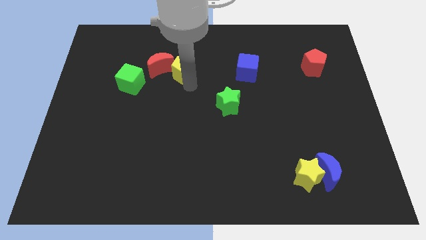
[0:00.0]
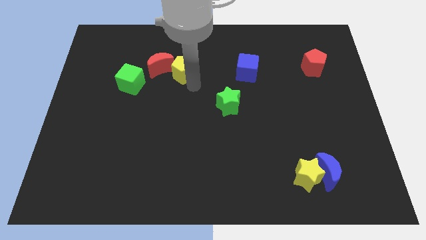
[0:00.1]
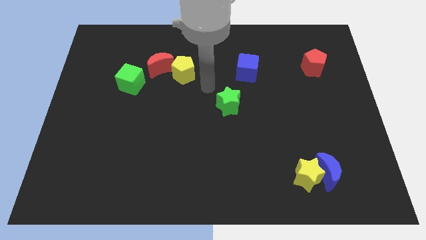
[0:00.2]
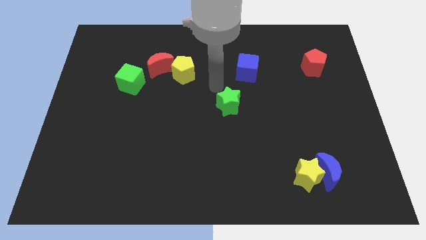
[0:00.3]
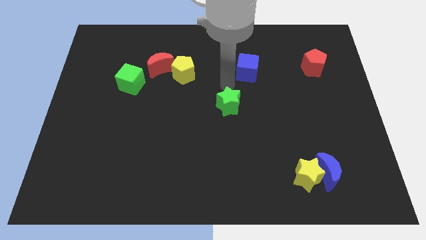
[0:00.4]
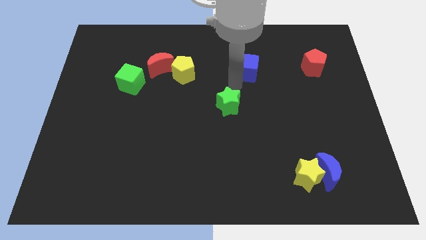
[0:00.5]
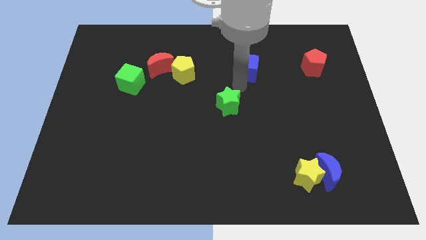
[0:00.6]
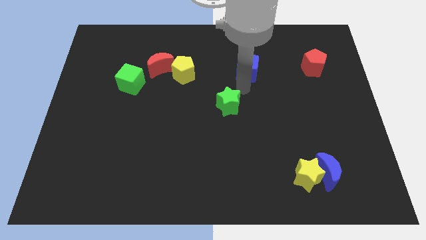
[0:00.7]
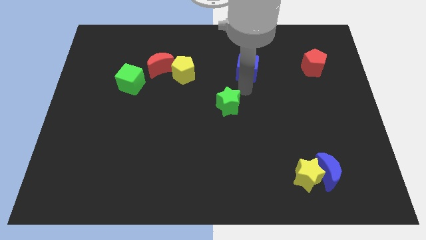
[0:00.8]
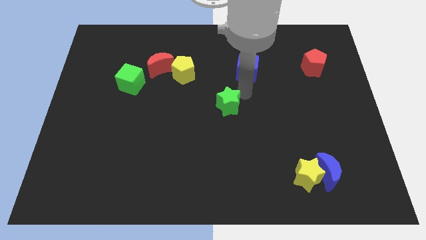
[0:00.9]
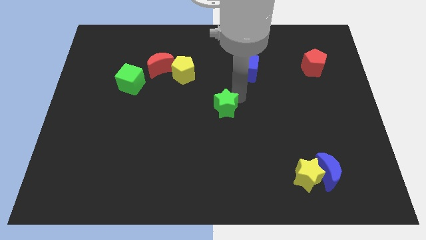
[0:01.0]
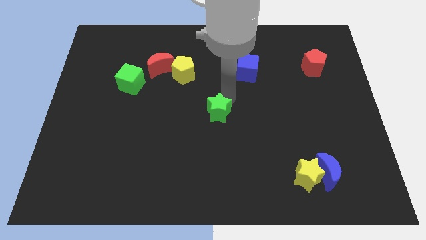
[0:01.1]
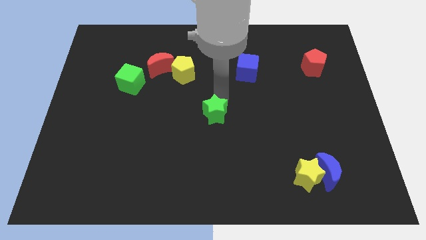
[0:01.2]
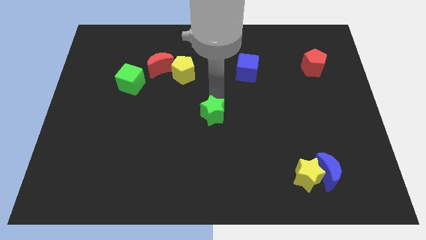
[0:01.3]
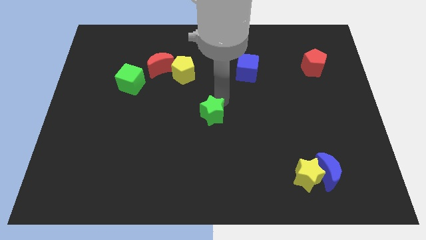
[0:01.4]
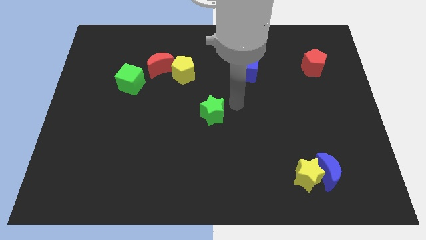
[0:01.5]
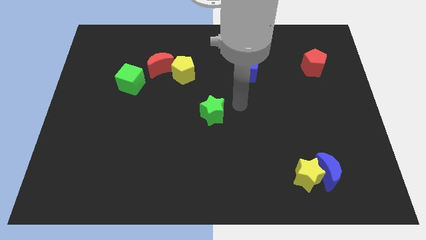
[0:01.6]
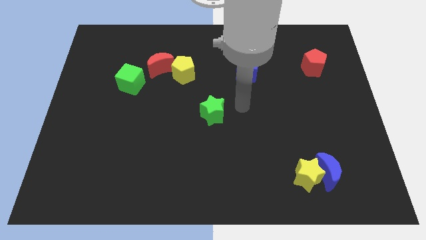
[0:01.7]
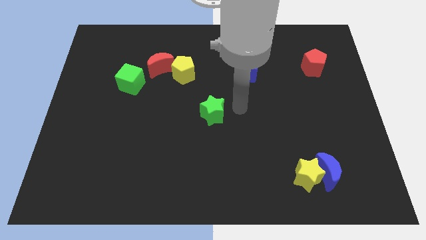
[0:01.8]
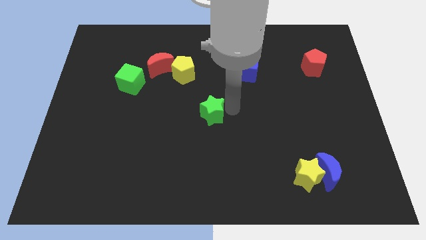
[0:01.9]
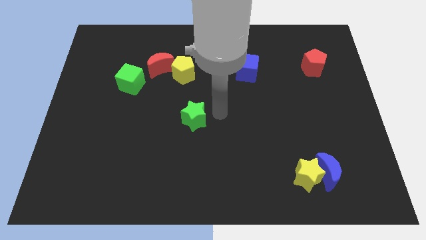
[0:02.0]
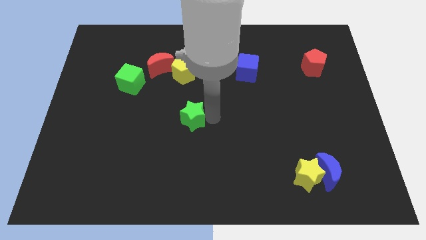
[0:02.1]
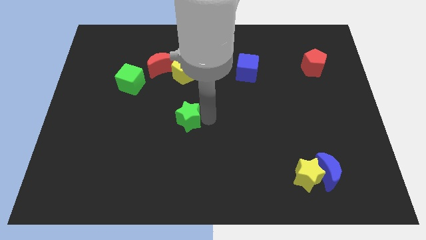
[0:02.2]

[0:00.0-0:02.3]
place the green star below the yellow pentagon

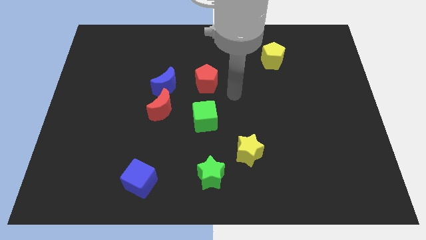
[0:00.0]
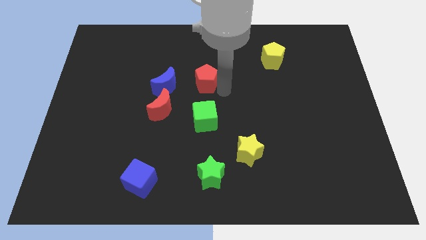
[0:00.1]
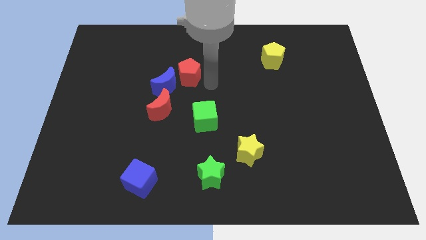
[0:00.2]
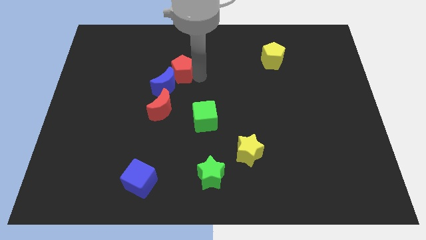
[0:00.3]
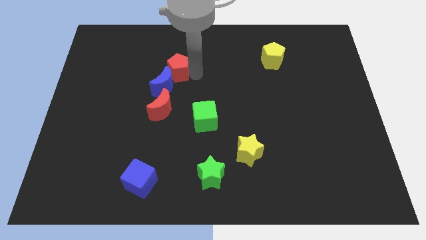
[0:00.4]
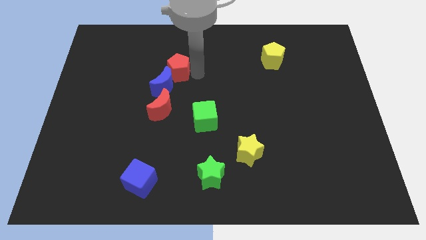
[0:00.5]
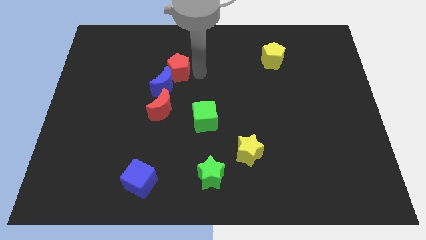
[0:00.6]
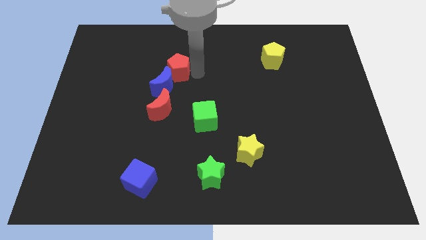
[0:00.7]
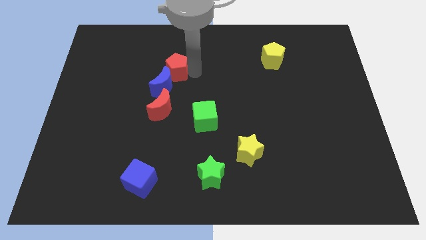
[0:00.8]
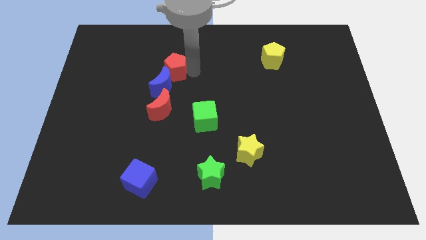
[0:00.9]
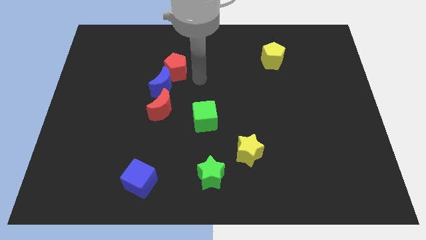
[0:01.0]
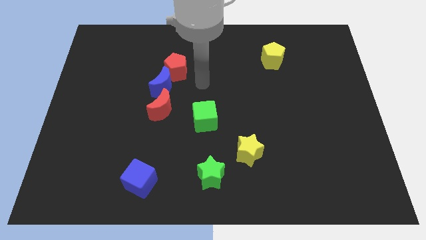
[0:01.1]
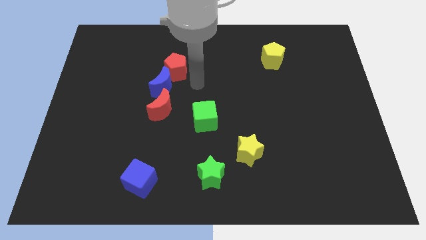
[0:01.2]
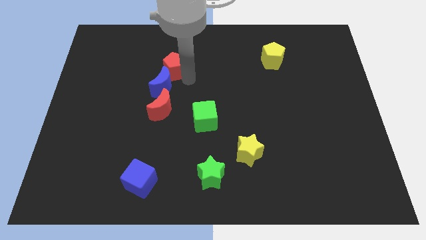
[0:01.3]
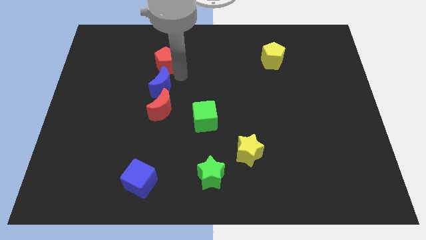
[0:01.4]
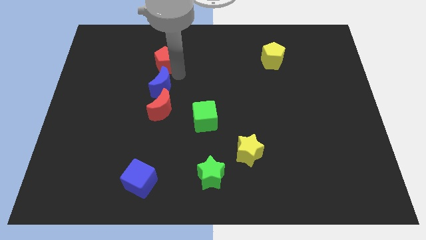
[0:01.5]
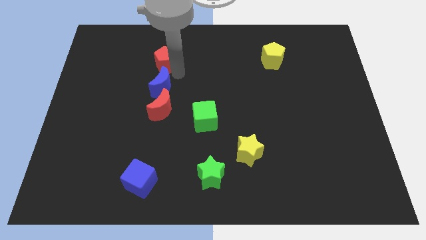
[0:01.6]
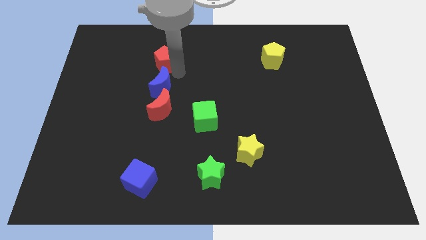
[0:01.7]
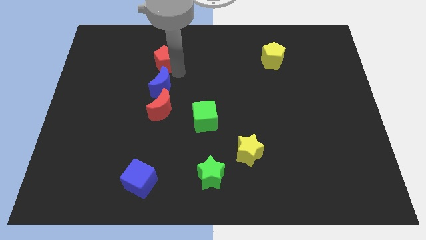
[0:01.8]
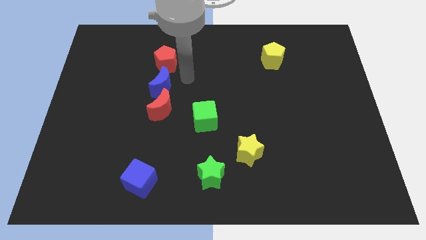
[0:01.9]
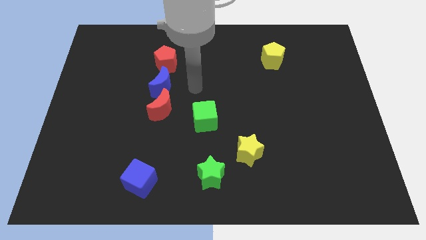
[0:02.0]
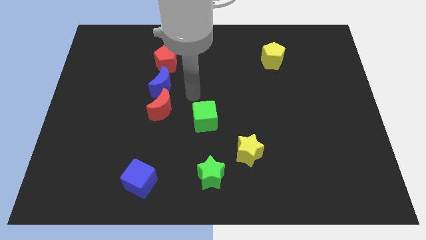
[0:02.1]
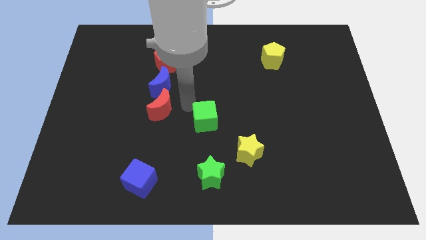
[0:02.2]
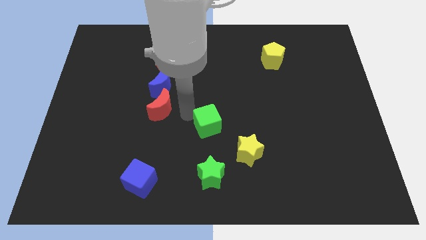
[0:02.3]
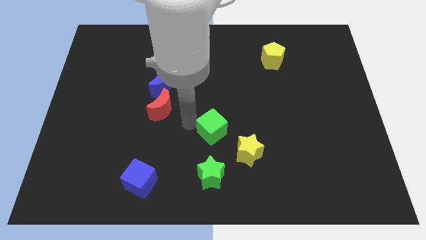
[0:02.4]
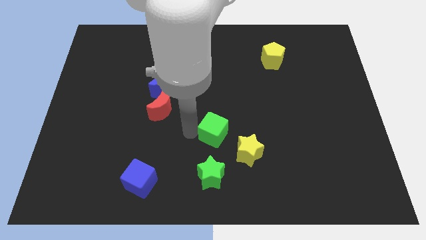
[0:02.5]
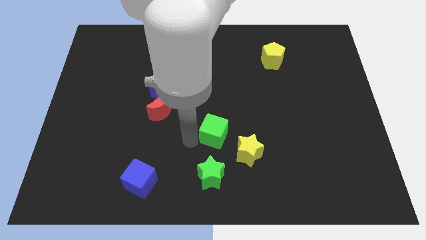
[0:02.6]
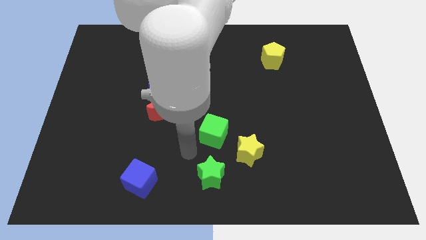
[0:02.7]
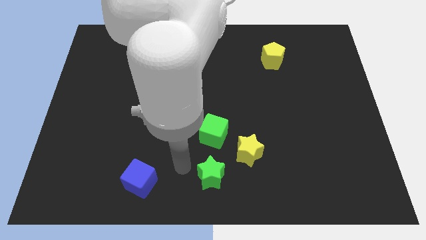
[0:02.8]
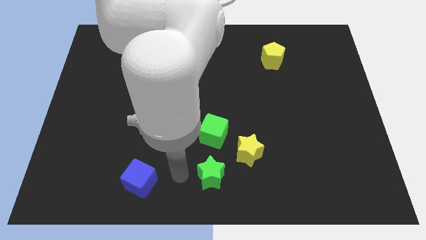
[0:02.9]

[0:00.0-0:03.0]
drag the red pentagon to the top of blue moon

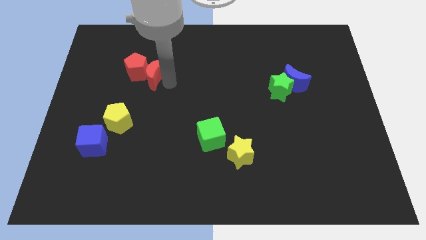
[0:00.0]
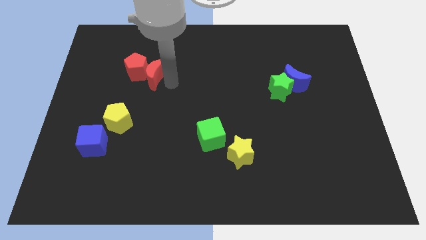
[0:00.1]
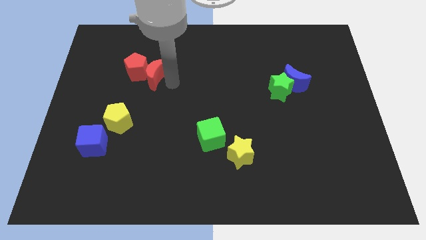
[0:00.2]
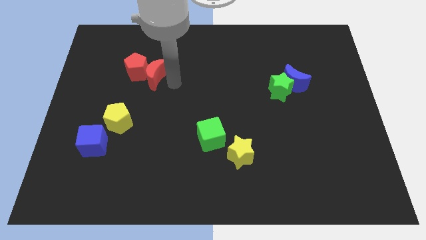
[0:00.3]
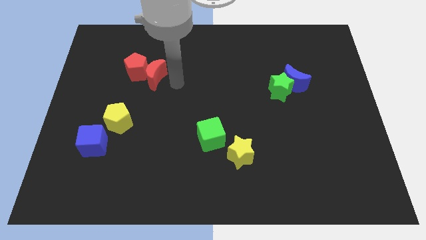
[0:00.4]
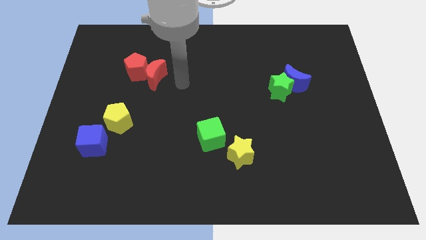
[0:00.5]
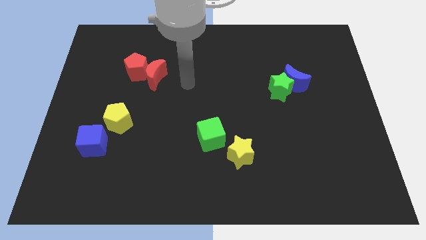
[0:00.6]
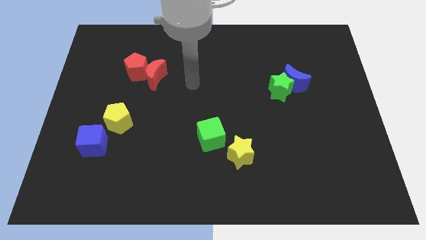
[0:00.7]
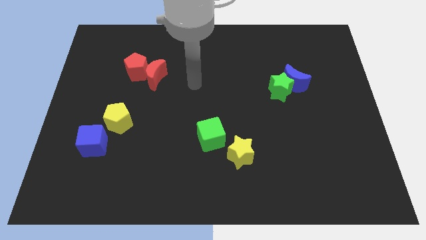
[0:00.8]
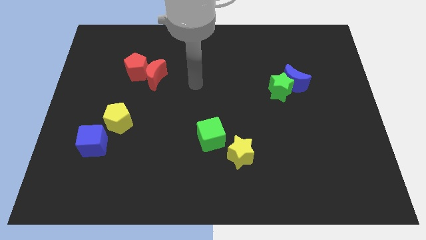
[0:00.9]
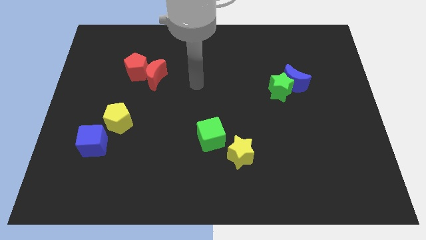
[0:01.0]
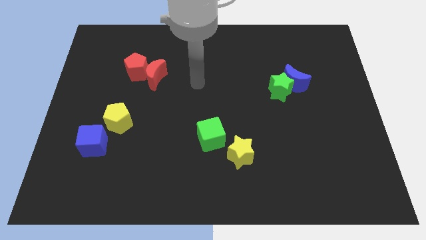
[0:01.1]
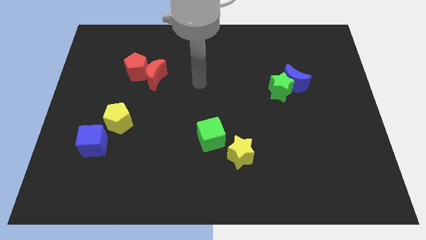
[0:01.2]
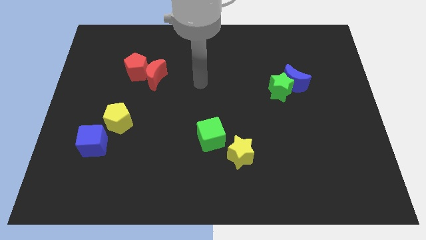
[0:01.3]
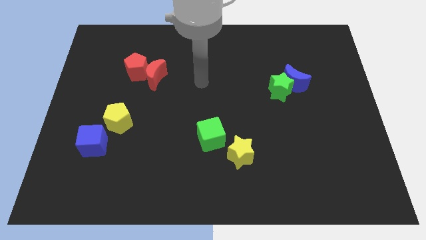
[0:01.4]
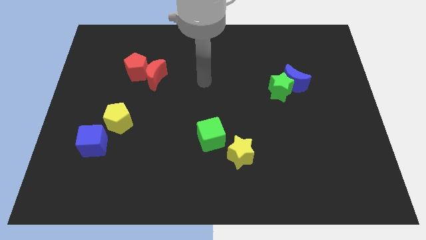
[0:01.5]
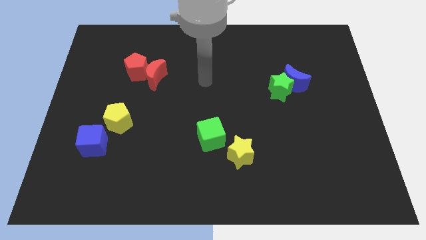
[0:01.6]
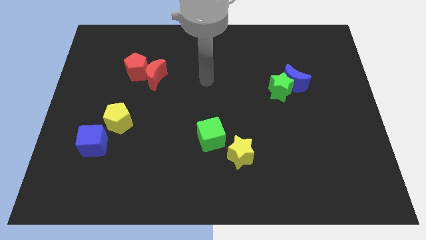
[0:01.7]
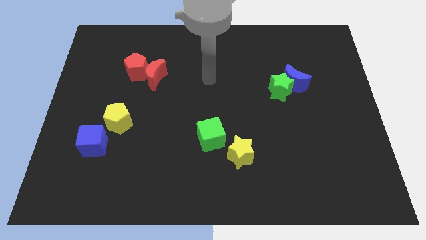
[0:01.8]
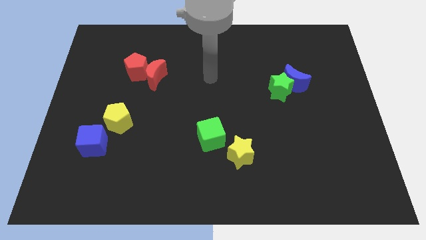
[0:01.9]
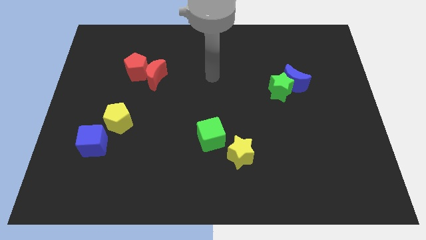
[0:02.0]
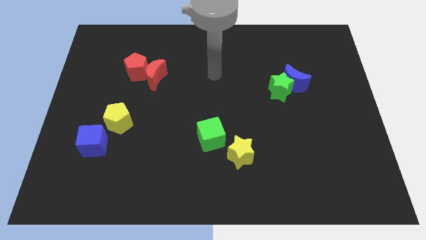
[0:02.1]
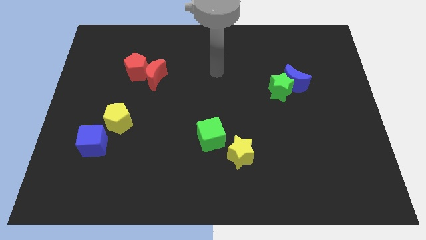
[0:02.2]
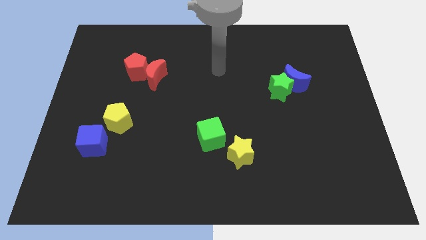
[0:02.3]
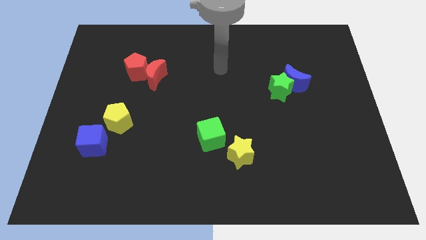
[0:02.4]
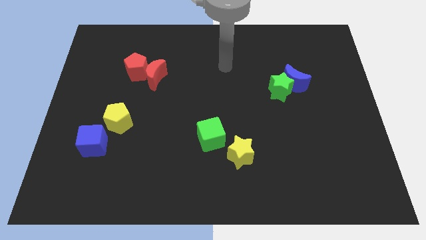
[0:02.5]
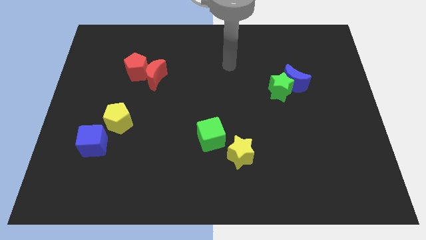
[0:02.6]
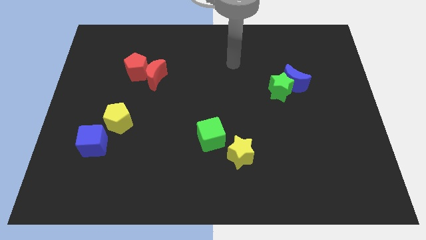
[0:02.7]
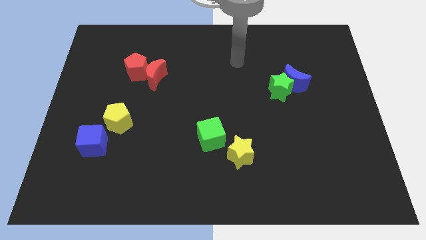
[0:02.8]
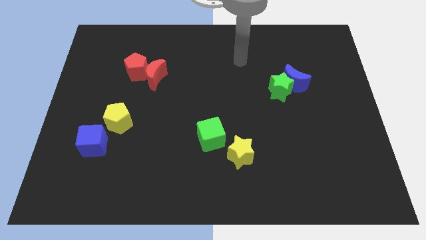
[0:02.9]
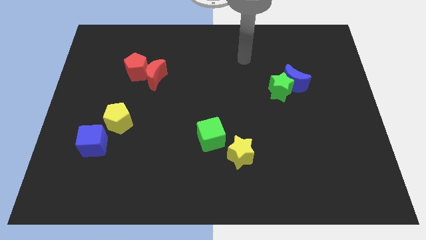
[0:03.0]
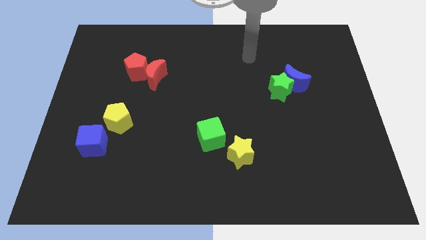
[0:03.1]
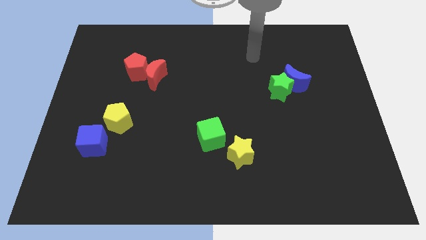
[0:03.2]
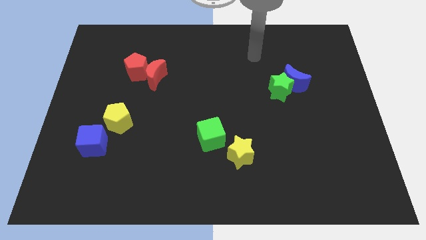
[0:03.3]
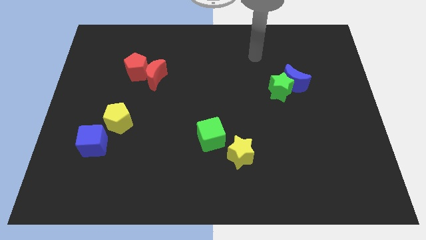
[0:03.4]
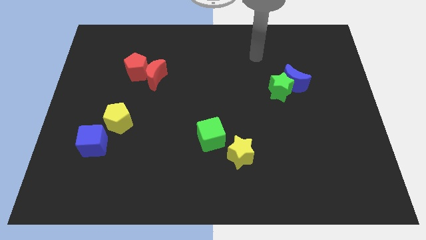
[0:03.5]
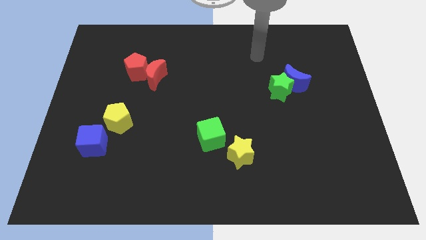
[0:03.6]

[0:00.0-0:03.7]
move your arm away from the red moon
